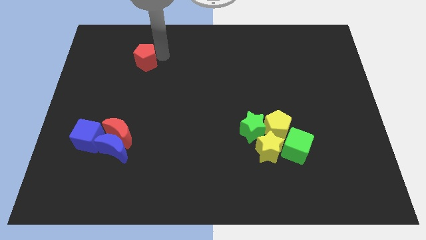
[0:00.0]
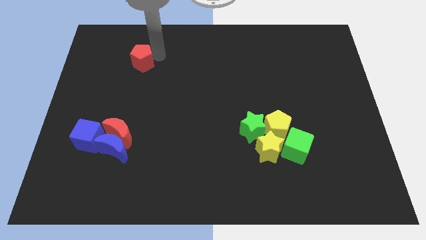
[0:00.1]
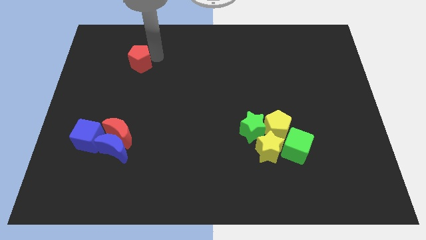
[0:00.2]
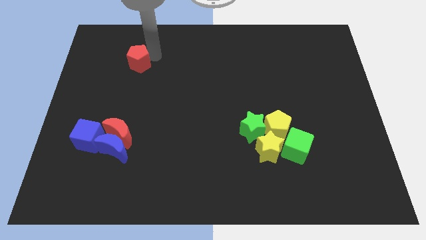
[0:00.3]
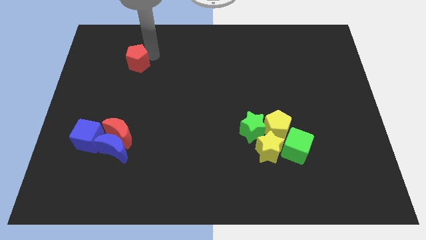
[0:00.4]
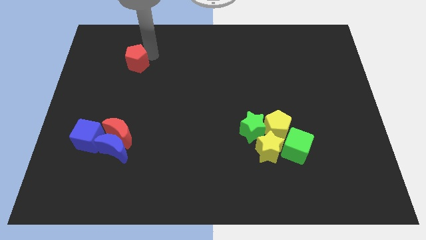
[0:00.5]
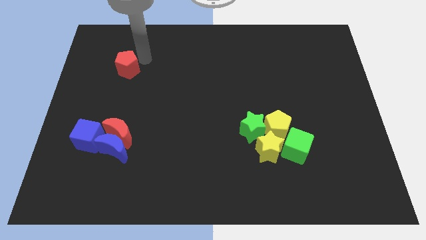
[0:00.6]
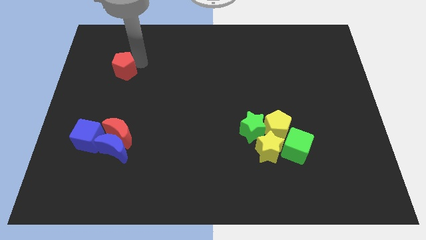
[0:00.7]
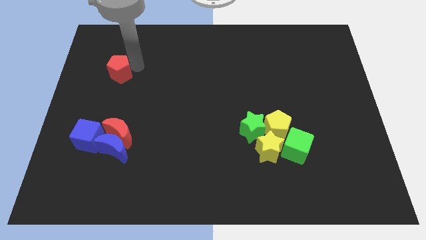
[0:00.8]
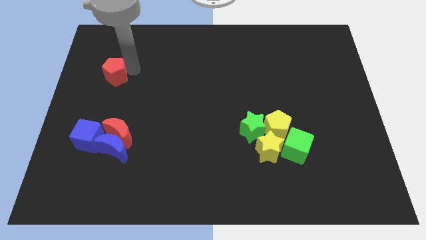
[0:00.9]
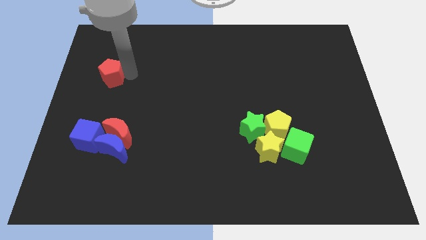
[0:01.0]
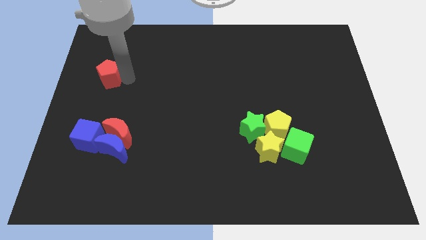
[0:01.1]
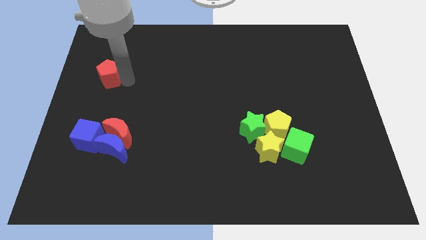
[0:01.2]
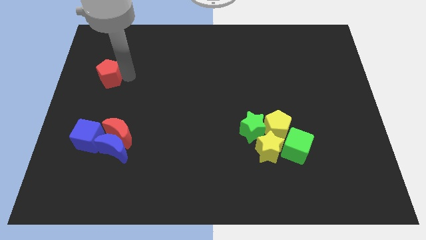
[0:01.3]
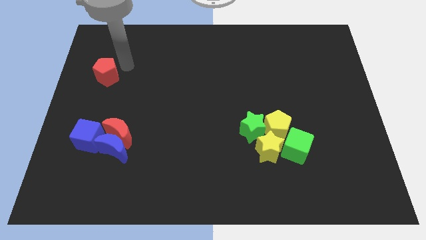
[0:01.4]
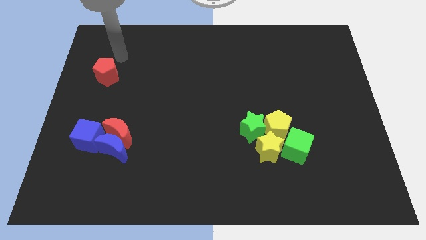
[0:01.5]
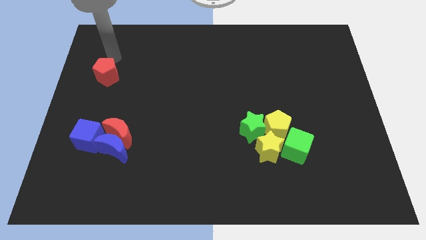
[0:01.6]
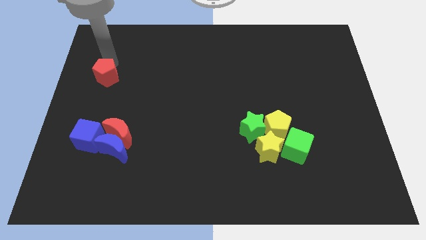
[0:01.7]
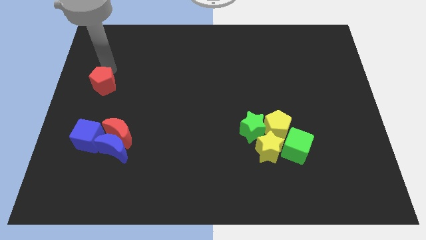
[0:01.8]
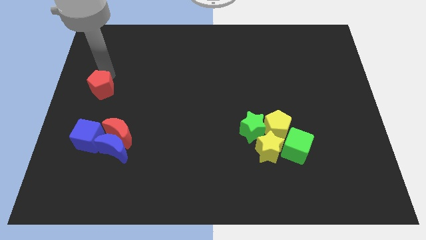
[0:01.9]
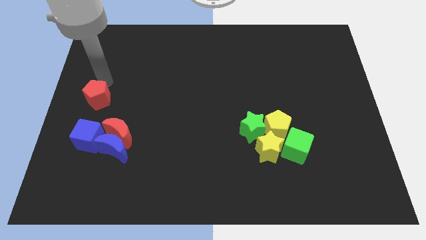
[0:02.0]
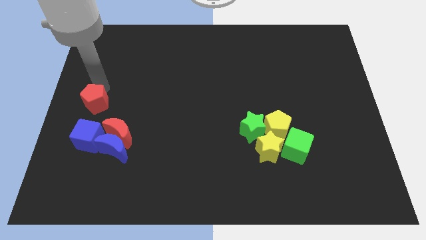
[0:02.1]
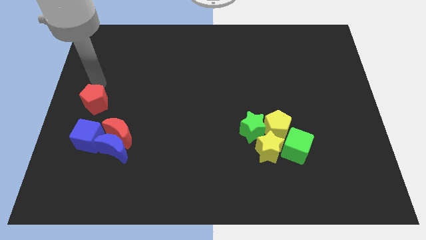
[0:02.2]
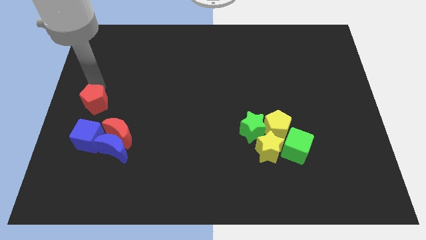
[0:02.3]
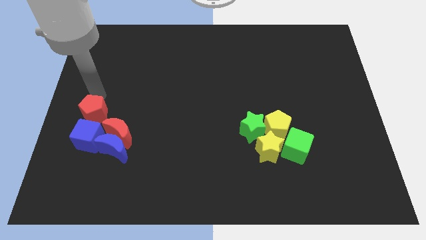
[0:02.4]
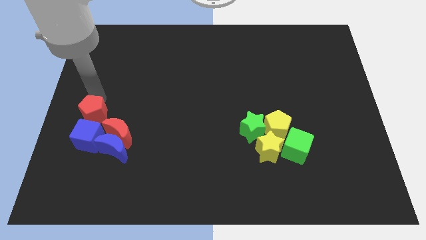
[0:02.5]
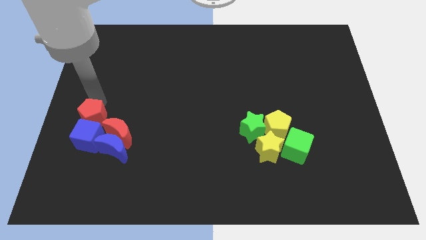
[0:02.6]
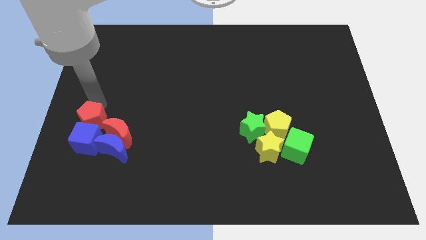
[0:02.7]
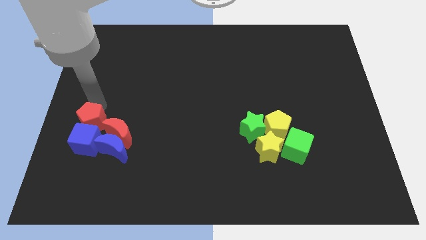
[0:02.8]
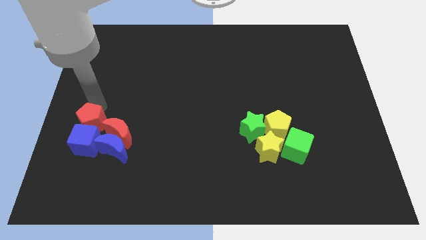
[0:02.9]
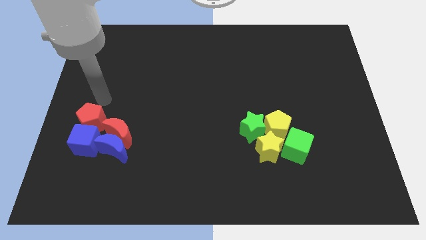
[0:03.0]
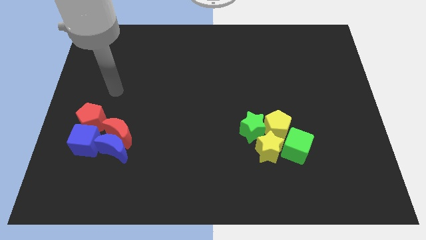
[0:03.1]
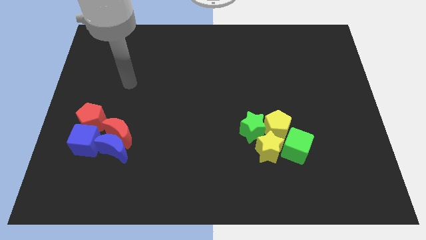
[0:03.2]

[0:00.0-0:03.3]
move the red pentagon into the blue cube

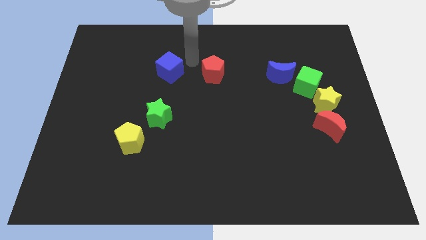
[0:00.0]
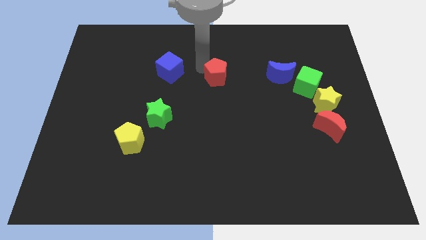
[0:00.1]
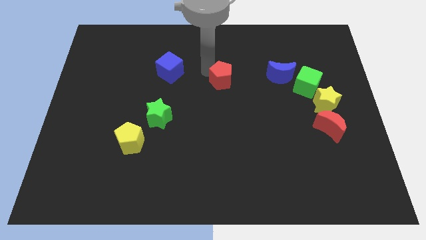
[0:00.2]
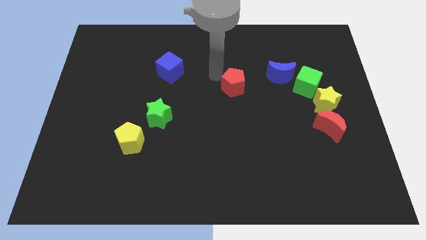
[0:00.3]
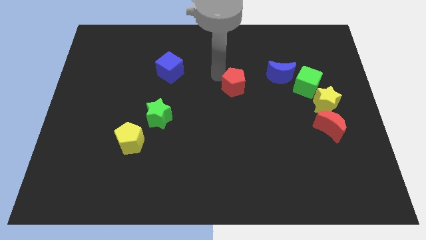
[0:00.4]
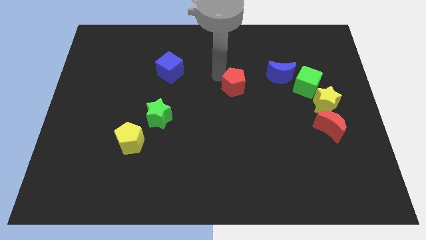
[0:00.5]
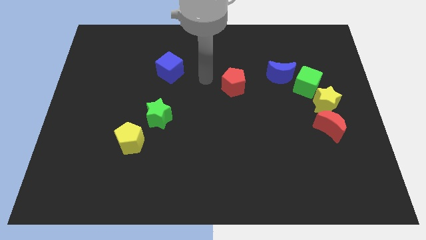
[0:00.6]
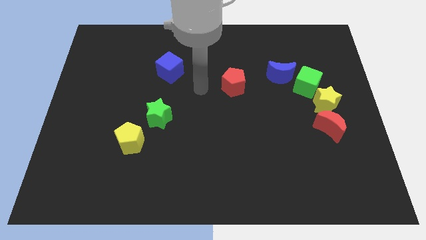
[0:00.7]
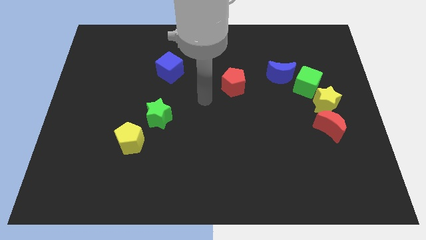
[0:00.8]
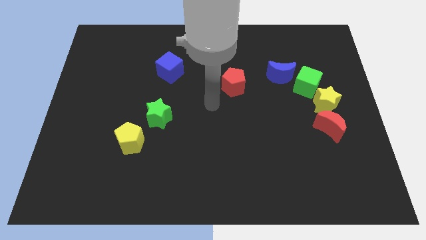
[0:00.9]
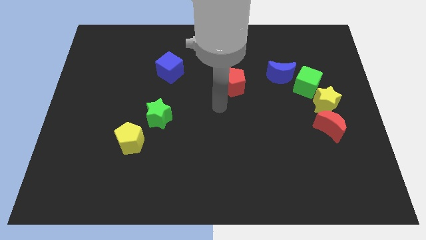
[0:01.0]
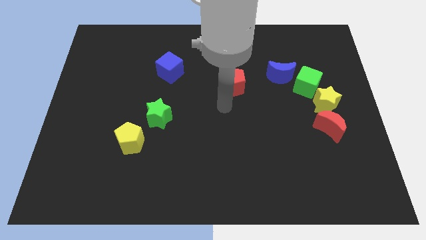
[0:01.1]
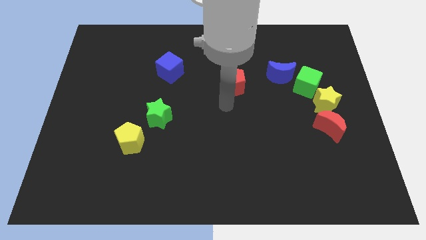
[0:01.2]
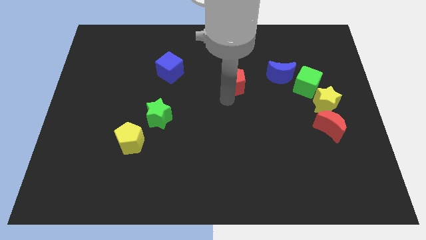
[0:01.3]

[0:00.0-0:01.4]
push the red pentagon to the bottom of the board

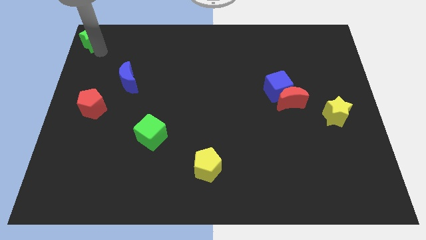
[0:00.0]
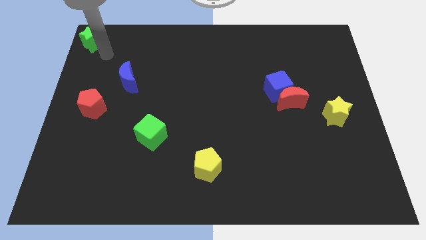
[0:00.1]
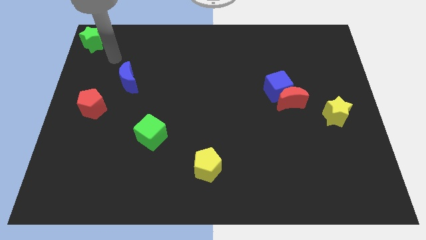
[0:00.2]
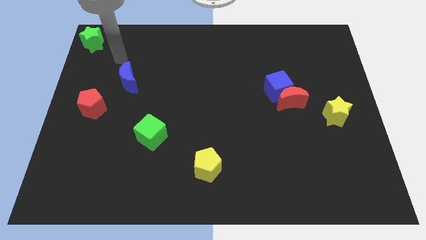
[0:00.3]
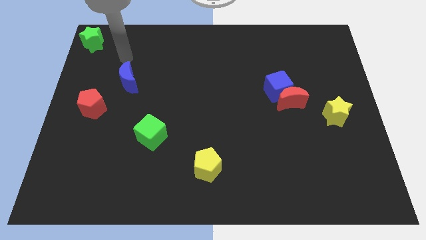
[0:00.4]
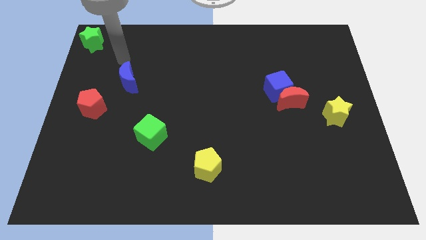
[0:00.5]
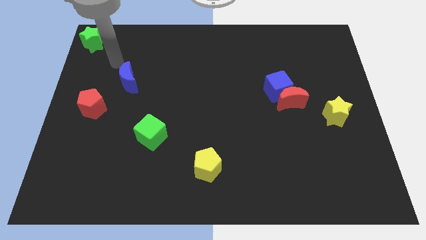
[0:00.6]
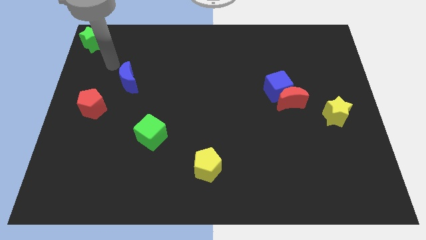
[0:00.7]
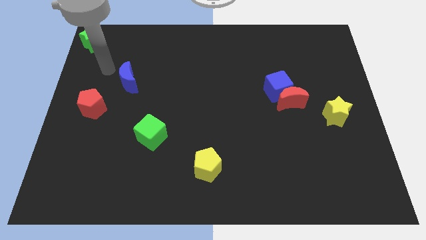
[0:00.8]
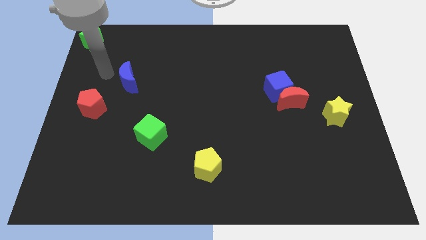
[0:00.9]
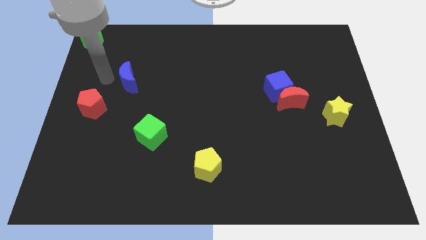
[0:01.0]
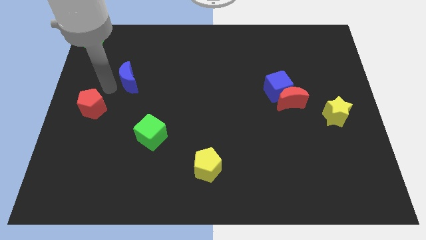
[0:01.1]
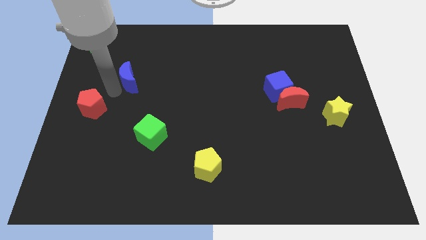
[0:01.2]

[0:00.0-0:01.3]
point the arm in between the blue moon and red pentagon

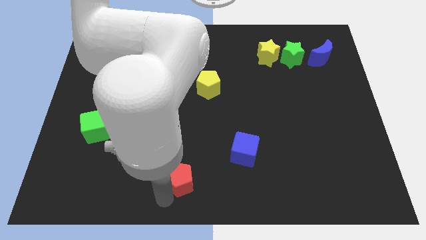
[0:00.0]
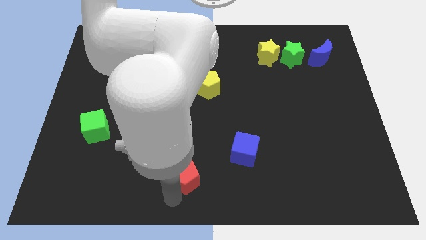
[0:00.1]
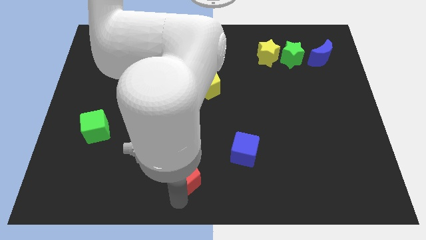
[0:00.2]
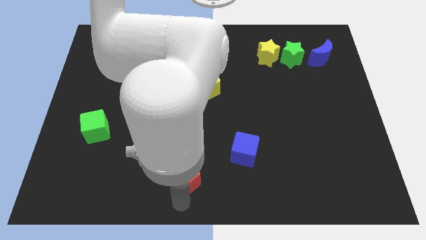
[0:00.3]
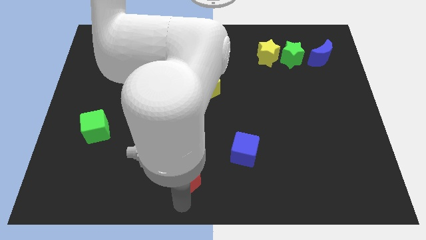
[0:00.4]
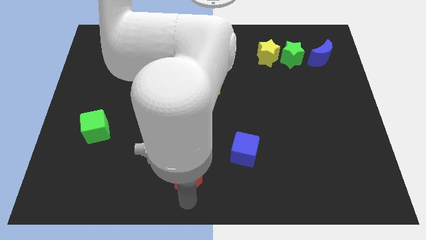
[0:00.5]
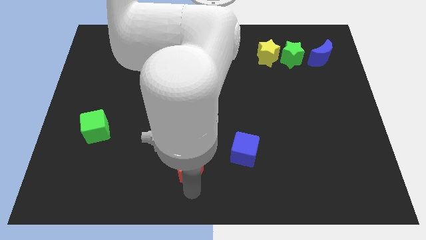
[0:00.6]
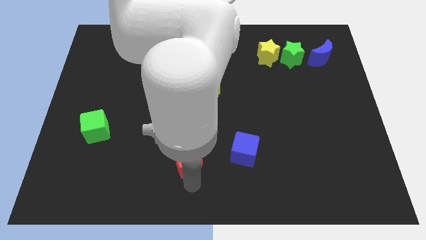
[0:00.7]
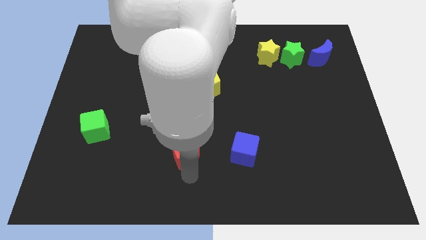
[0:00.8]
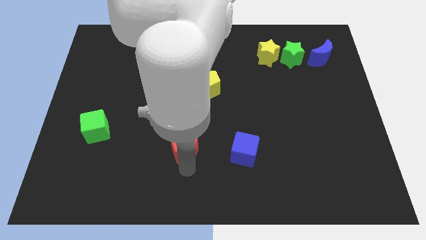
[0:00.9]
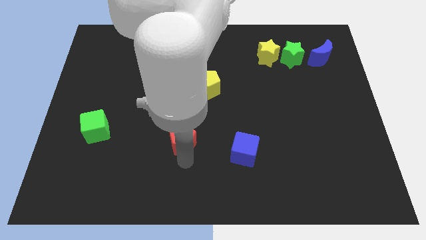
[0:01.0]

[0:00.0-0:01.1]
place red pentagon to the left of blue cube

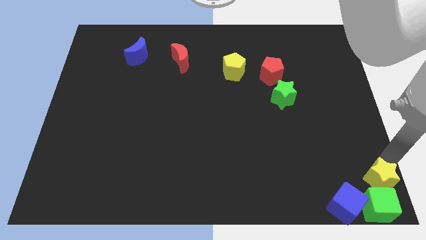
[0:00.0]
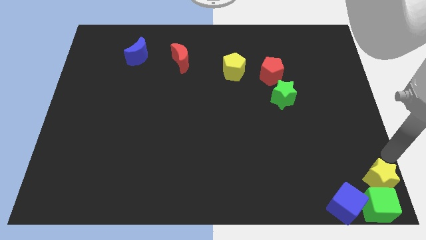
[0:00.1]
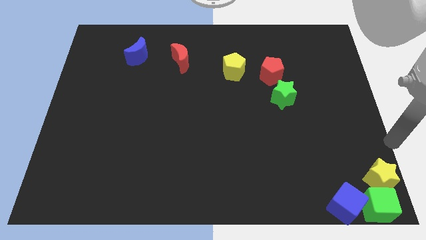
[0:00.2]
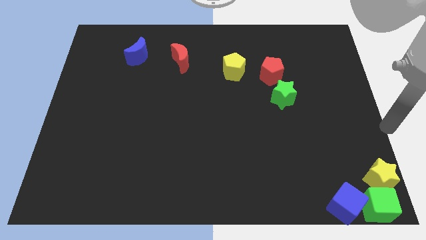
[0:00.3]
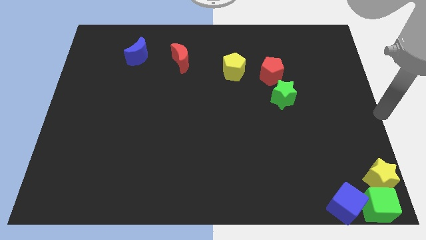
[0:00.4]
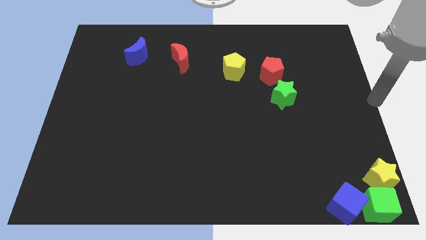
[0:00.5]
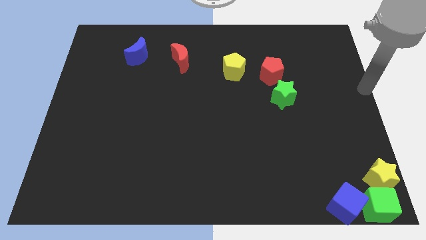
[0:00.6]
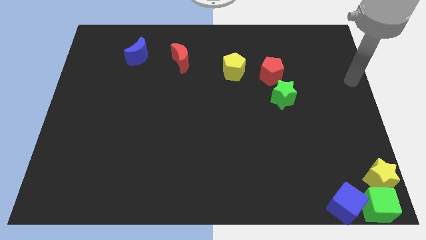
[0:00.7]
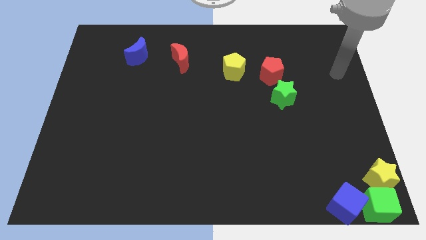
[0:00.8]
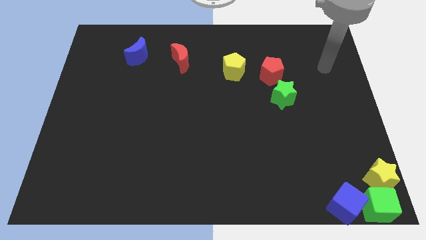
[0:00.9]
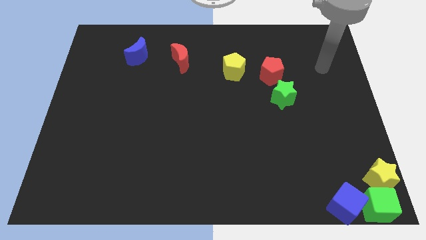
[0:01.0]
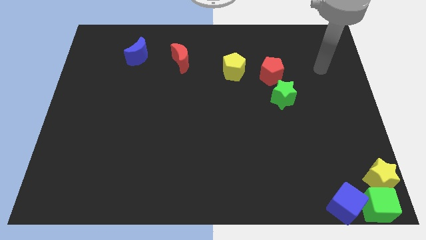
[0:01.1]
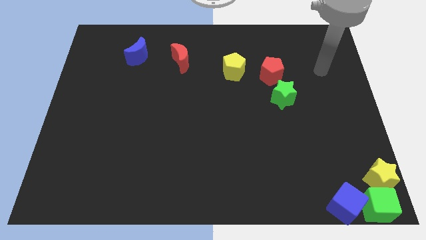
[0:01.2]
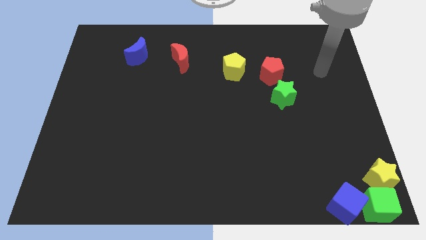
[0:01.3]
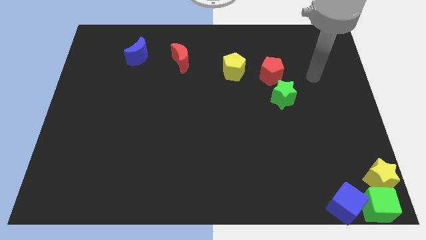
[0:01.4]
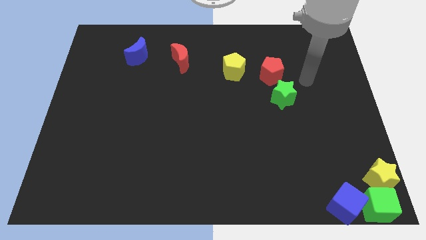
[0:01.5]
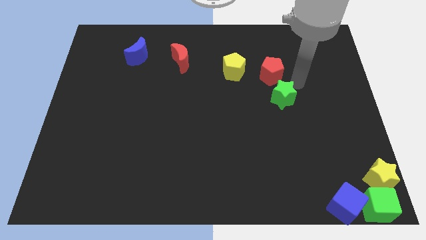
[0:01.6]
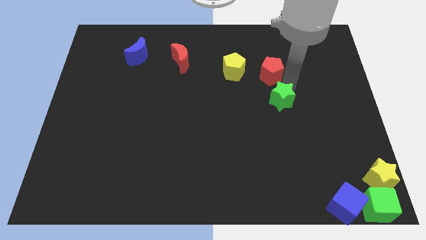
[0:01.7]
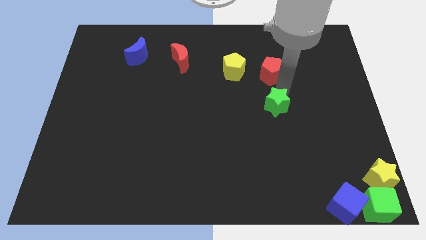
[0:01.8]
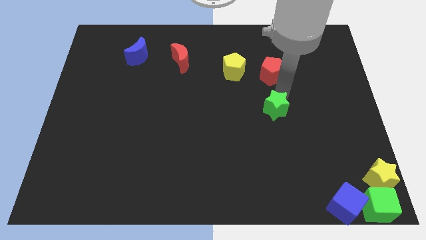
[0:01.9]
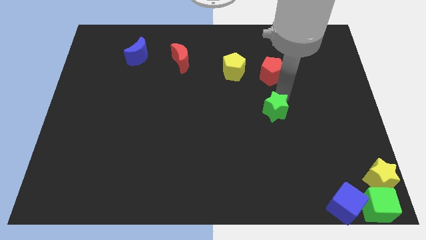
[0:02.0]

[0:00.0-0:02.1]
slide the green star vertically below the red pentagon
